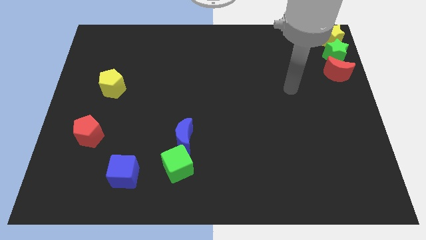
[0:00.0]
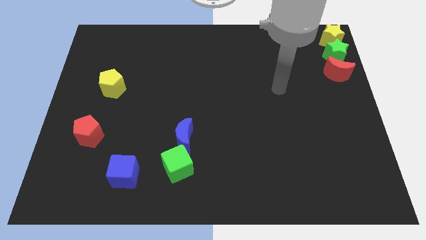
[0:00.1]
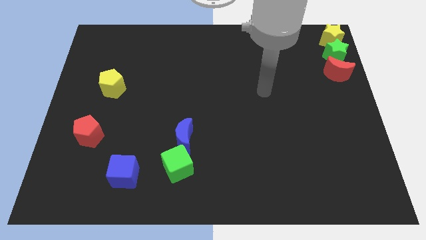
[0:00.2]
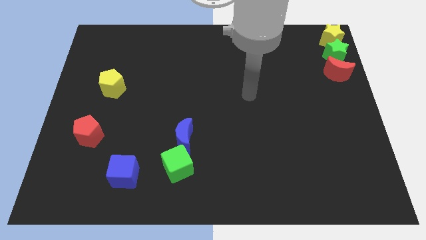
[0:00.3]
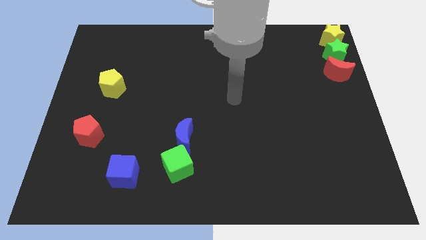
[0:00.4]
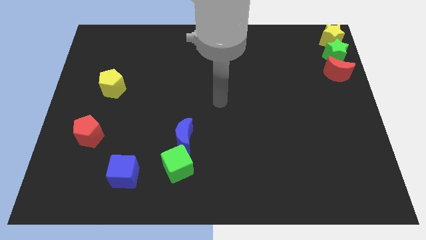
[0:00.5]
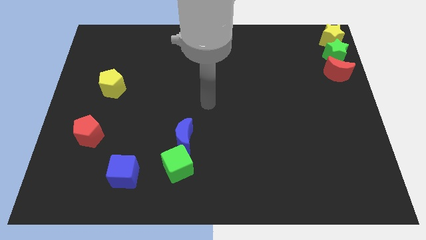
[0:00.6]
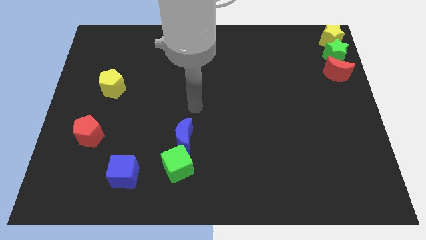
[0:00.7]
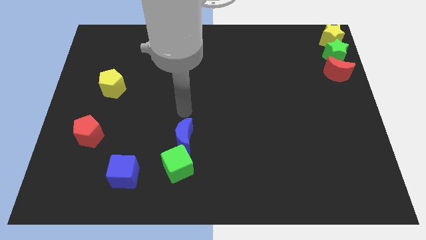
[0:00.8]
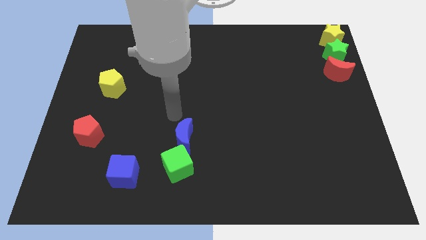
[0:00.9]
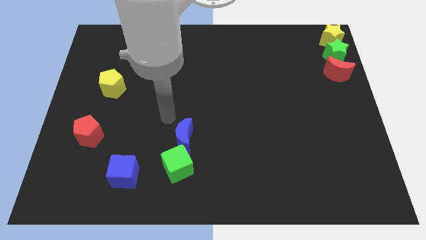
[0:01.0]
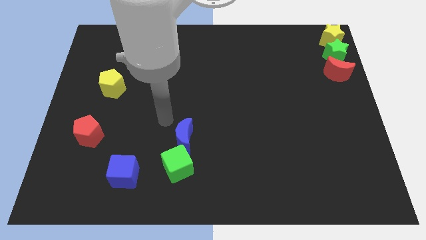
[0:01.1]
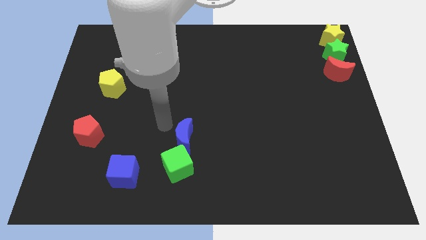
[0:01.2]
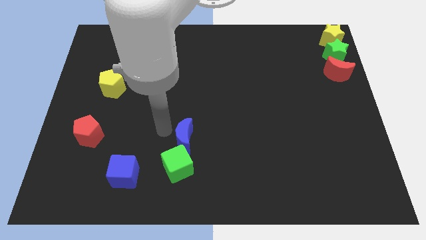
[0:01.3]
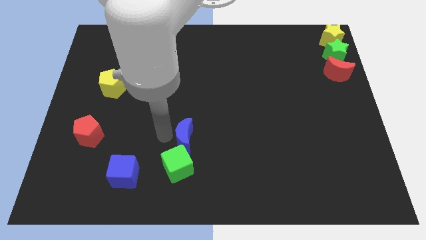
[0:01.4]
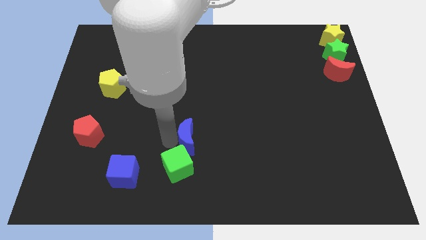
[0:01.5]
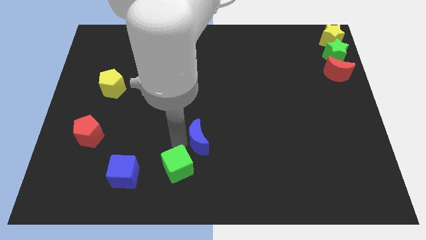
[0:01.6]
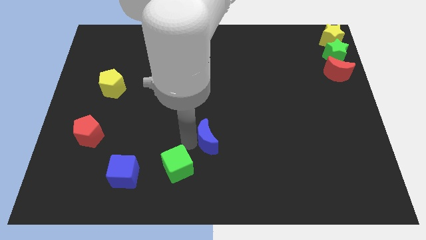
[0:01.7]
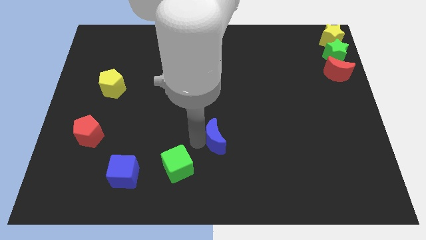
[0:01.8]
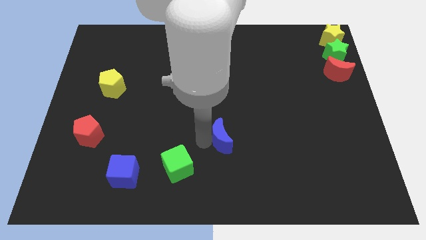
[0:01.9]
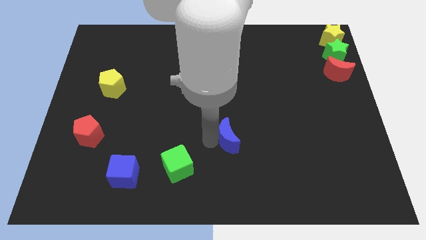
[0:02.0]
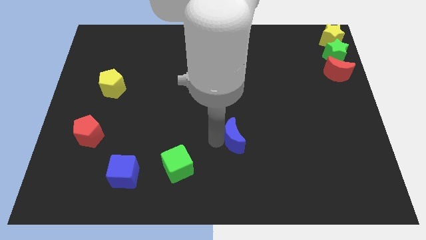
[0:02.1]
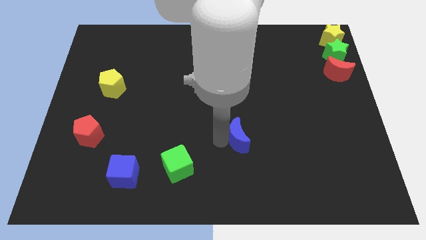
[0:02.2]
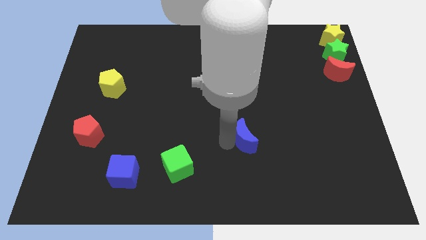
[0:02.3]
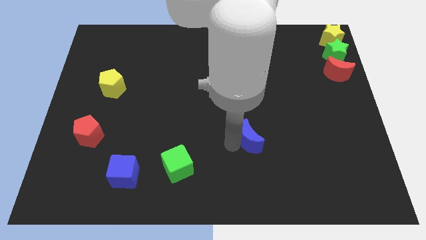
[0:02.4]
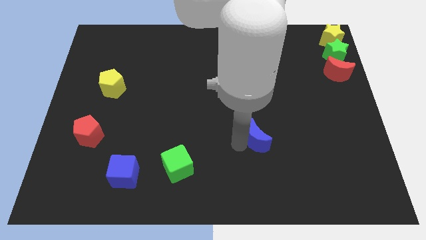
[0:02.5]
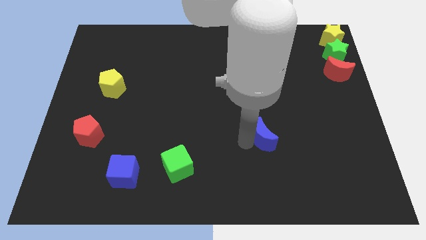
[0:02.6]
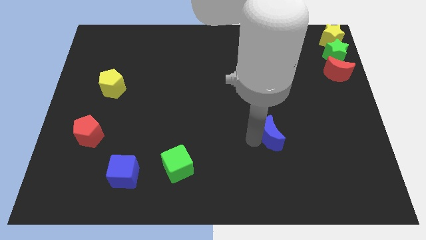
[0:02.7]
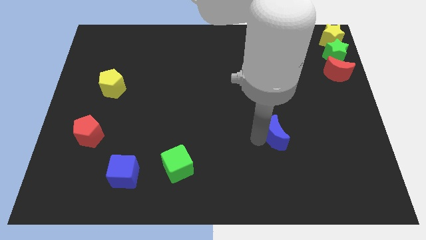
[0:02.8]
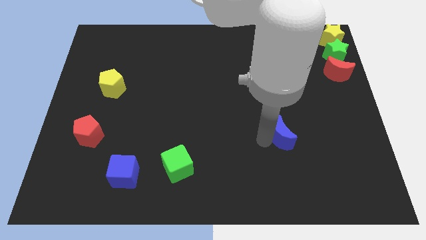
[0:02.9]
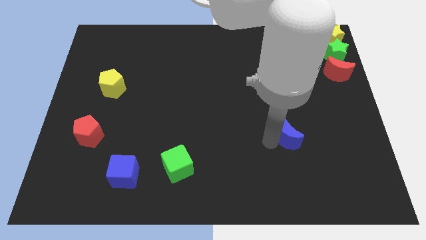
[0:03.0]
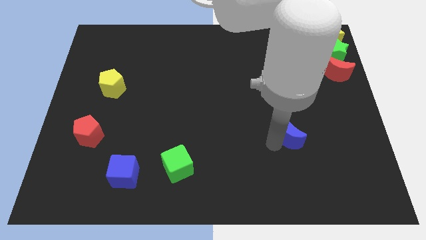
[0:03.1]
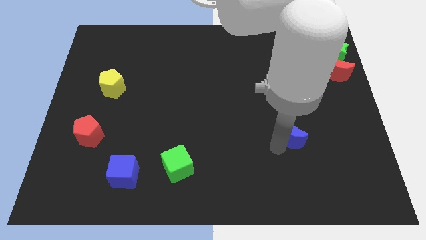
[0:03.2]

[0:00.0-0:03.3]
separate the blue crescent with green cube to the right side

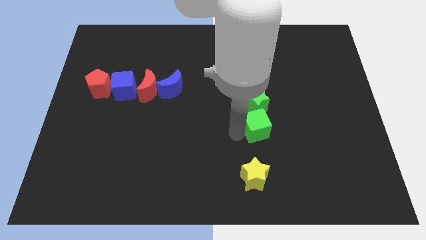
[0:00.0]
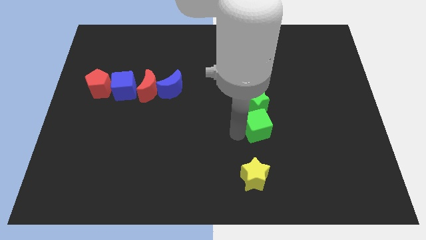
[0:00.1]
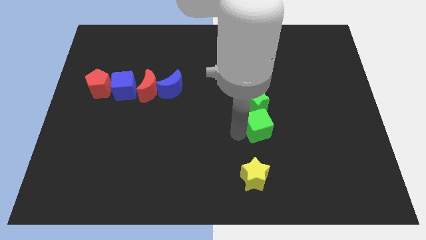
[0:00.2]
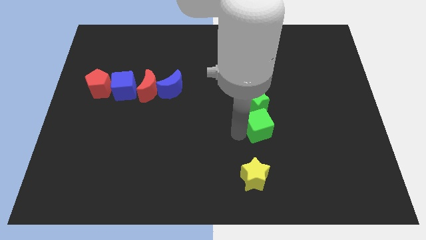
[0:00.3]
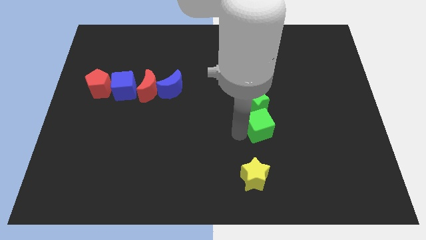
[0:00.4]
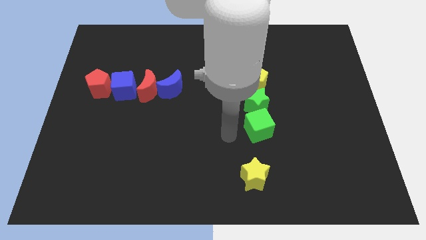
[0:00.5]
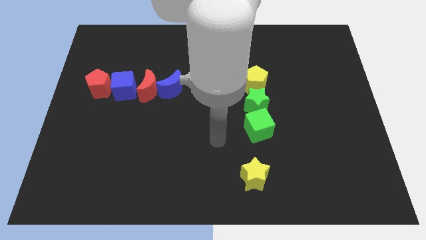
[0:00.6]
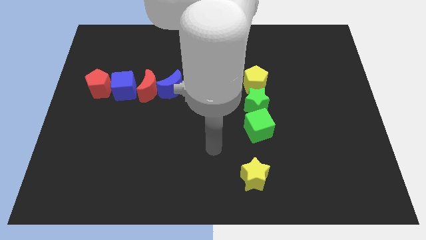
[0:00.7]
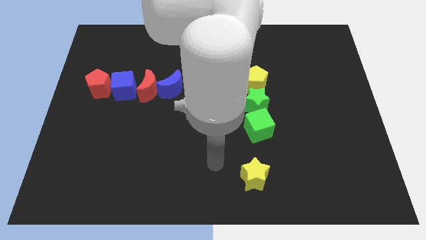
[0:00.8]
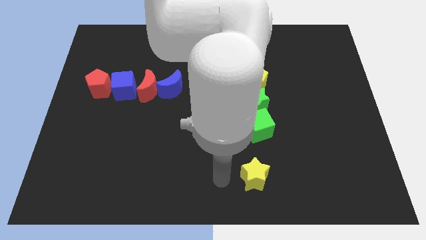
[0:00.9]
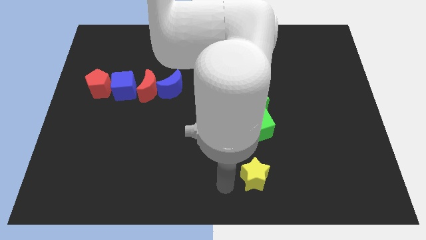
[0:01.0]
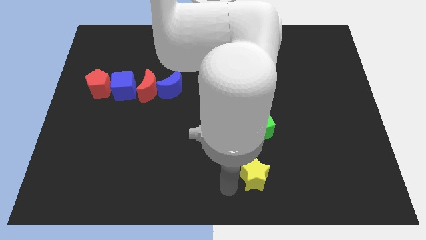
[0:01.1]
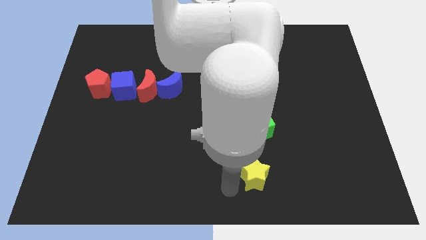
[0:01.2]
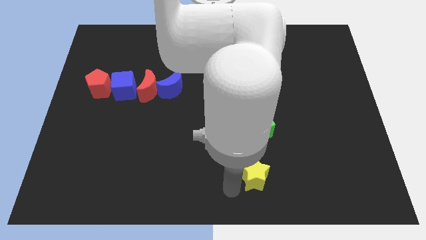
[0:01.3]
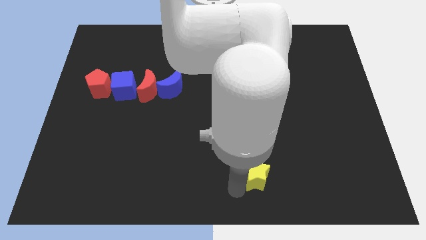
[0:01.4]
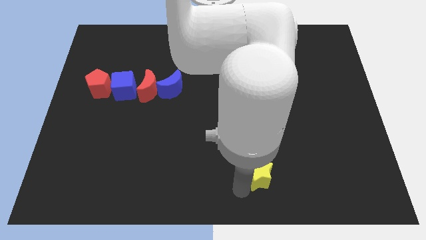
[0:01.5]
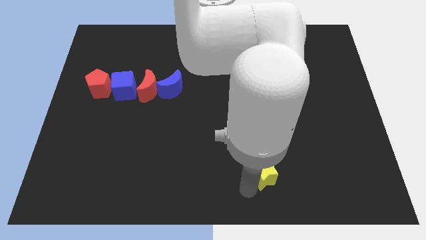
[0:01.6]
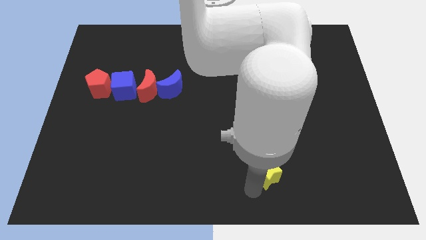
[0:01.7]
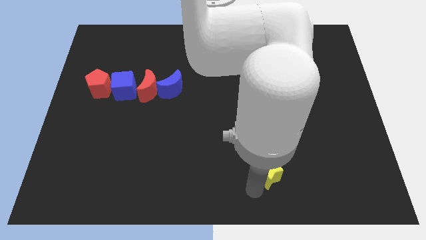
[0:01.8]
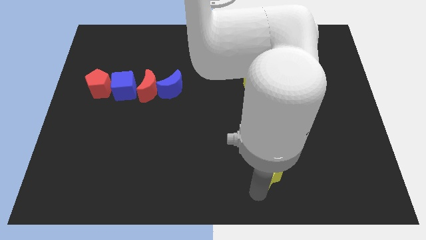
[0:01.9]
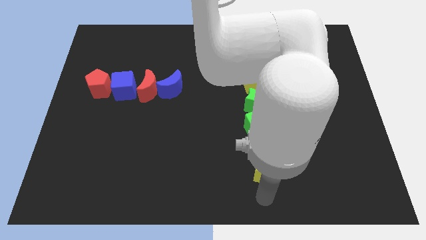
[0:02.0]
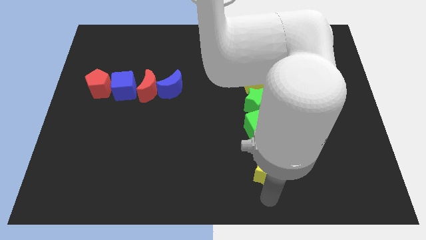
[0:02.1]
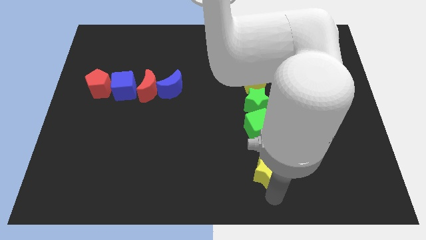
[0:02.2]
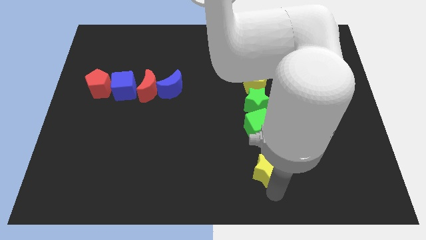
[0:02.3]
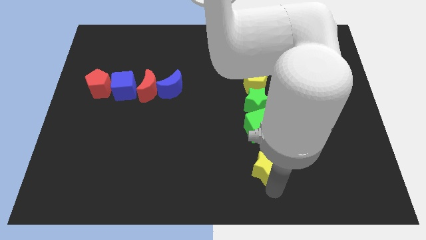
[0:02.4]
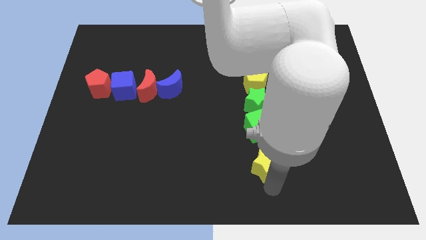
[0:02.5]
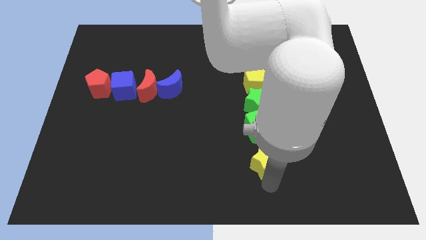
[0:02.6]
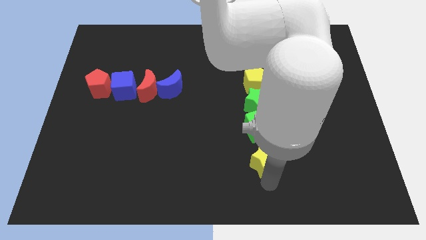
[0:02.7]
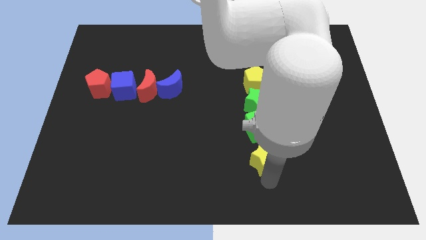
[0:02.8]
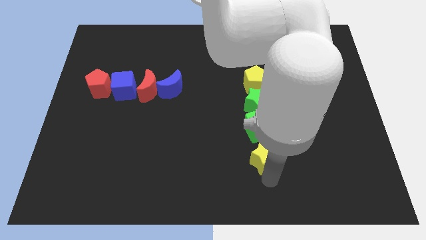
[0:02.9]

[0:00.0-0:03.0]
push yellow star in vertical line of blocks

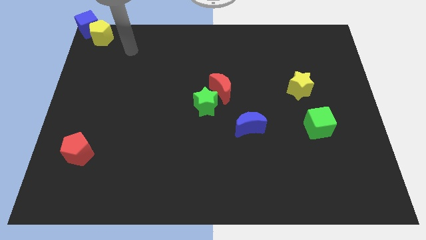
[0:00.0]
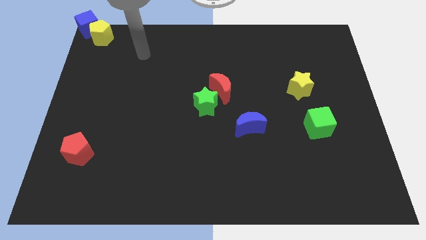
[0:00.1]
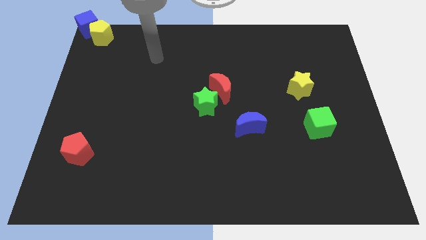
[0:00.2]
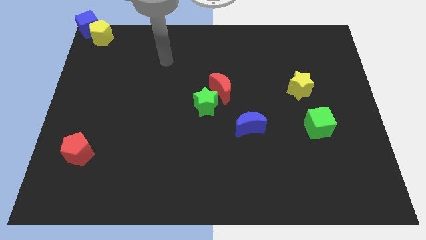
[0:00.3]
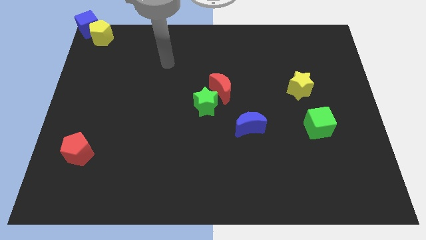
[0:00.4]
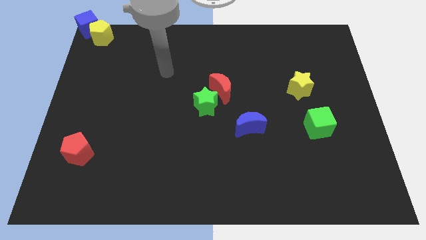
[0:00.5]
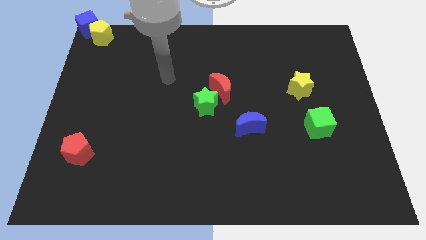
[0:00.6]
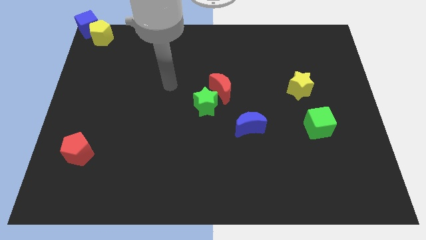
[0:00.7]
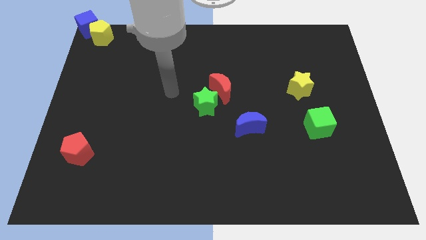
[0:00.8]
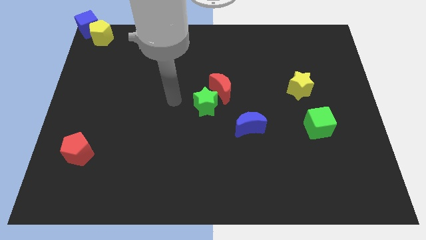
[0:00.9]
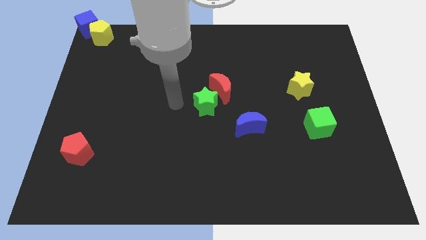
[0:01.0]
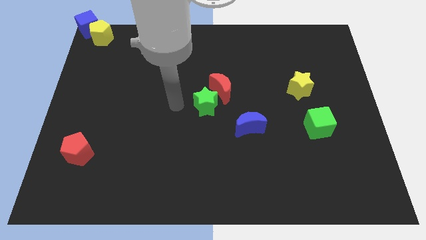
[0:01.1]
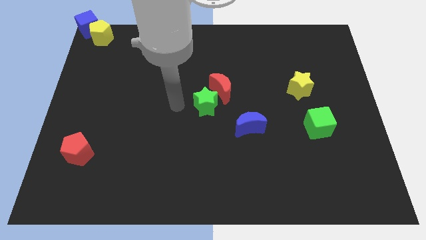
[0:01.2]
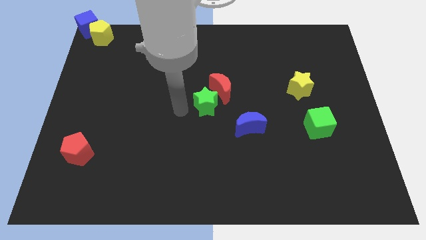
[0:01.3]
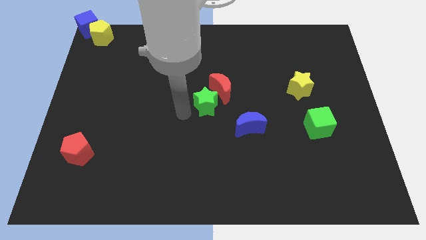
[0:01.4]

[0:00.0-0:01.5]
place the arm close to the green star

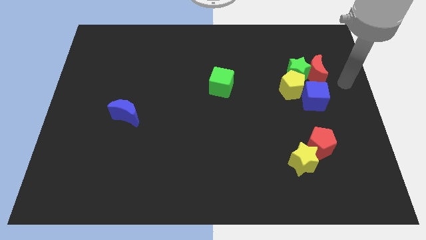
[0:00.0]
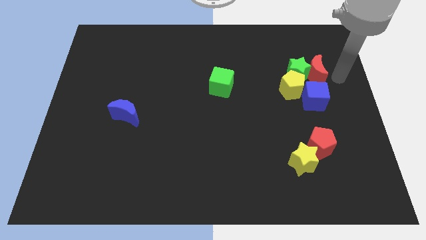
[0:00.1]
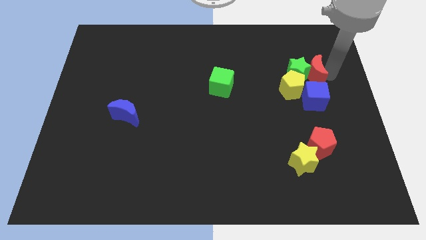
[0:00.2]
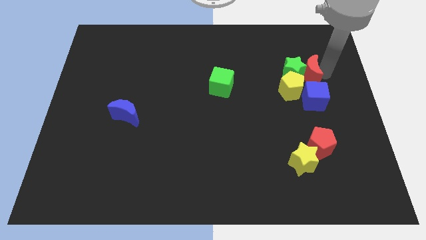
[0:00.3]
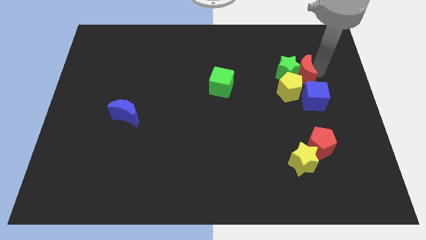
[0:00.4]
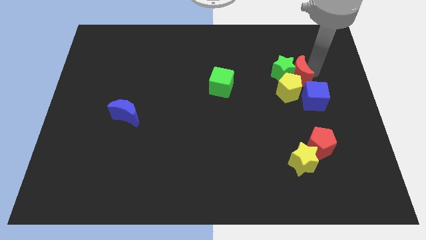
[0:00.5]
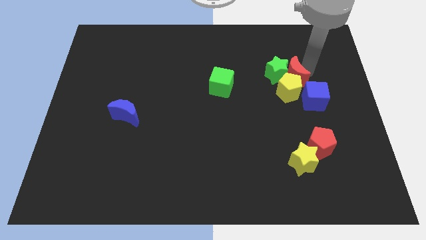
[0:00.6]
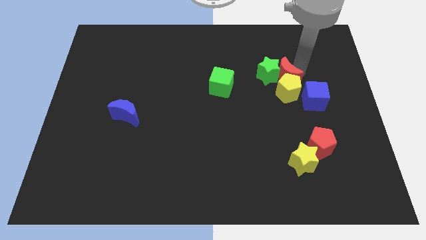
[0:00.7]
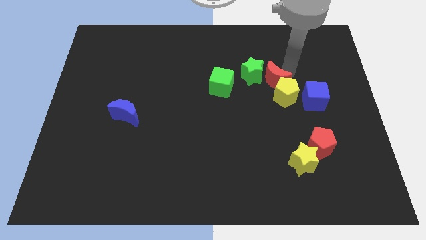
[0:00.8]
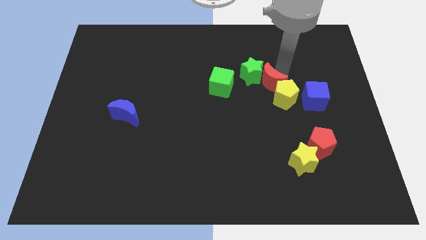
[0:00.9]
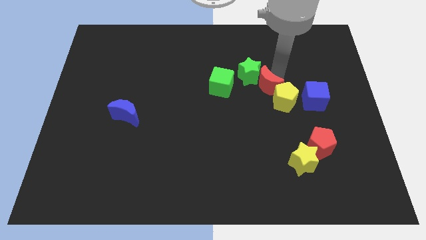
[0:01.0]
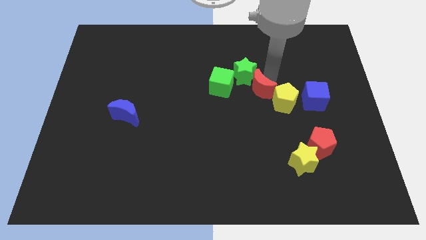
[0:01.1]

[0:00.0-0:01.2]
place the red moon between the green star and the yellow pentagon
